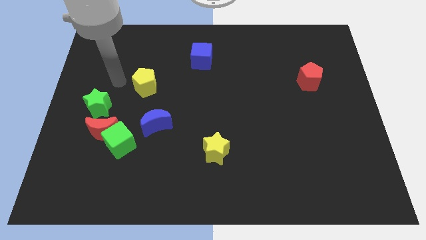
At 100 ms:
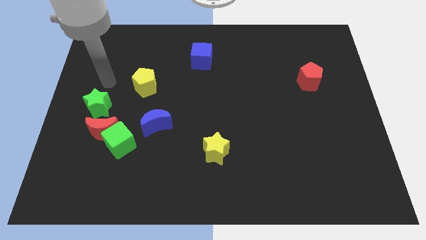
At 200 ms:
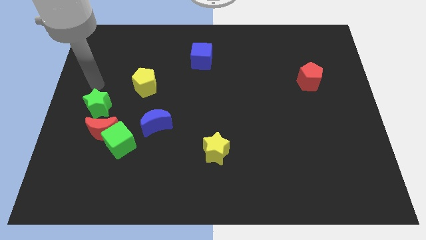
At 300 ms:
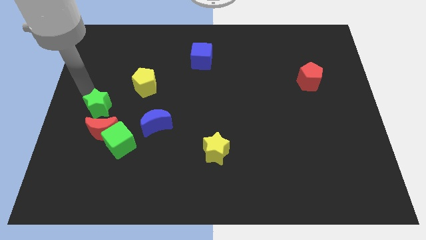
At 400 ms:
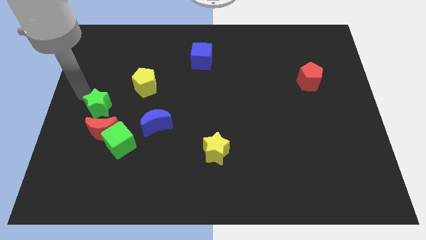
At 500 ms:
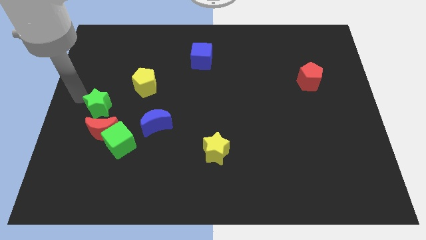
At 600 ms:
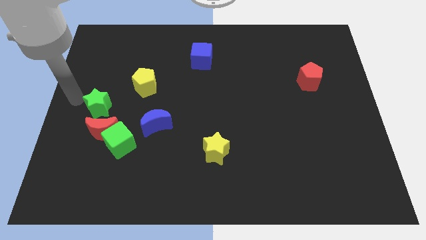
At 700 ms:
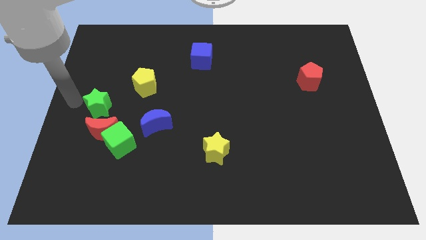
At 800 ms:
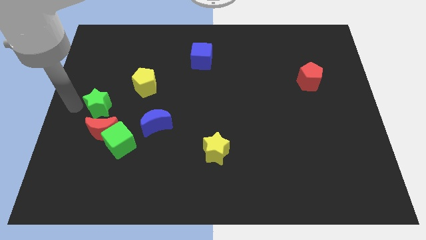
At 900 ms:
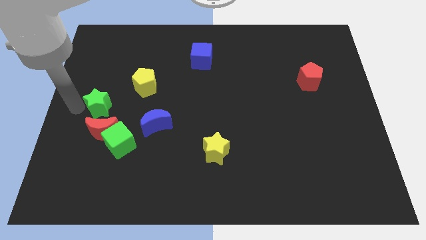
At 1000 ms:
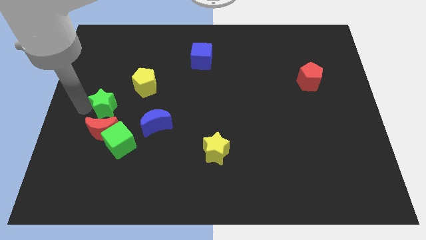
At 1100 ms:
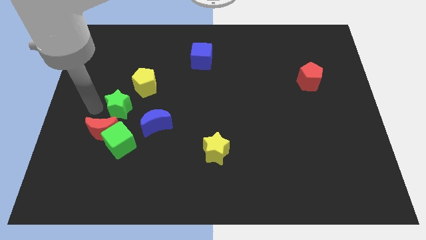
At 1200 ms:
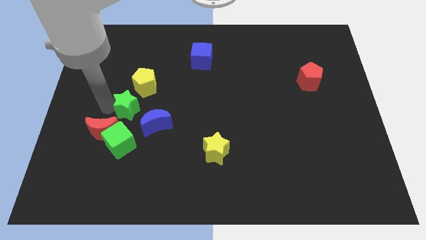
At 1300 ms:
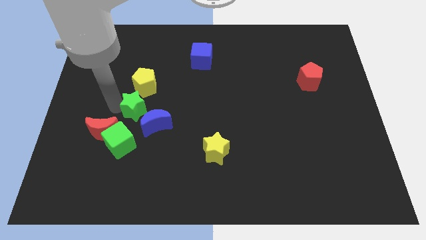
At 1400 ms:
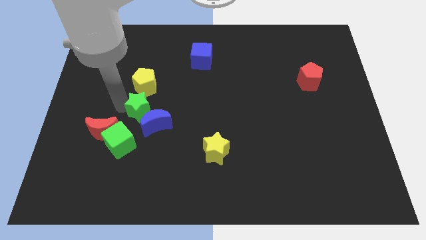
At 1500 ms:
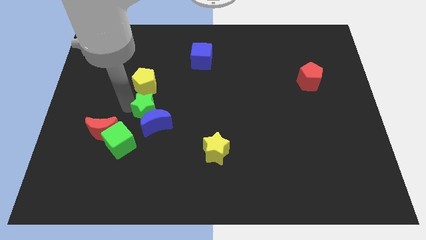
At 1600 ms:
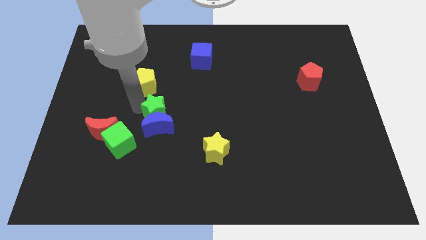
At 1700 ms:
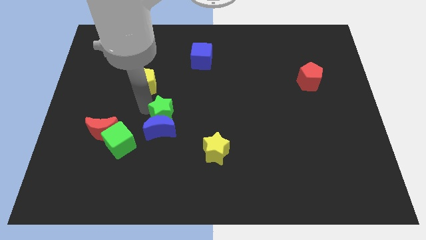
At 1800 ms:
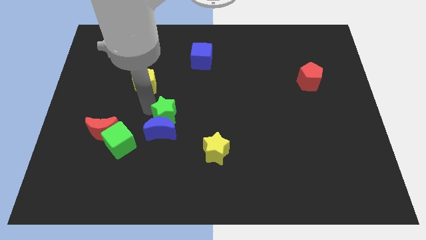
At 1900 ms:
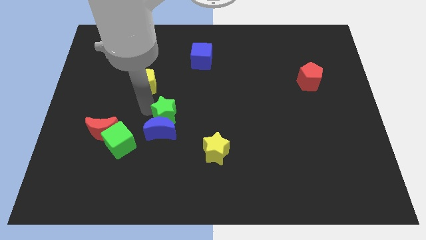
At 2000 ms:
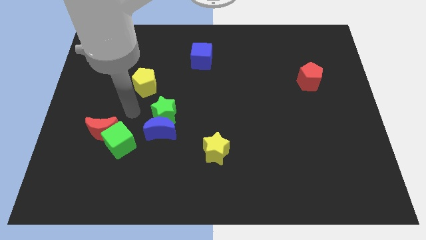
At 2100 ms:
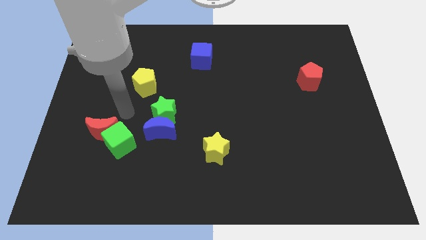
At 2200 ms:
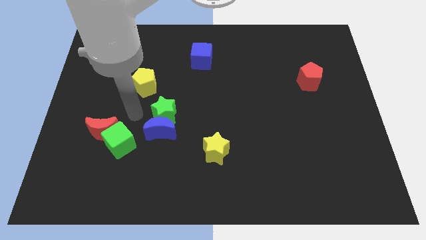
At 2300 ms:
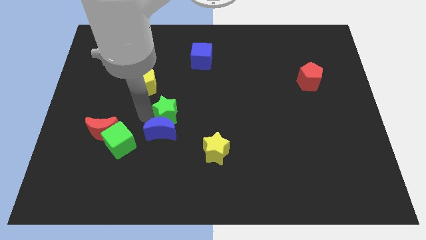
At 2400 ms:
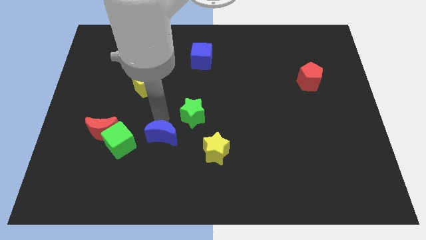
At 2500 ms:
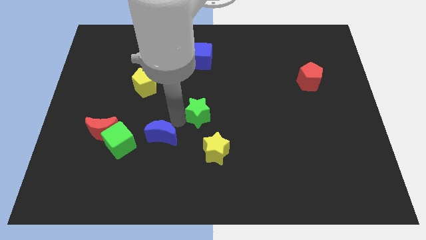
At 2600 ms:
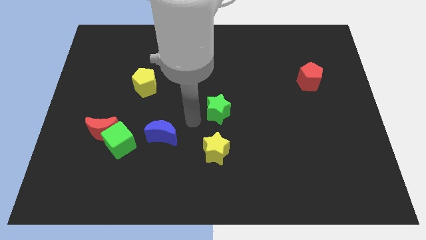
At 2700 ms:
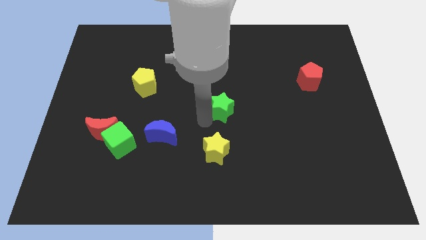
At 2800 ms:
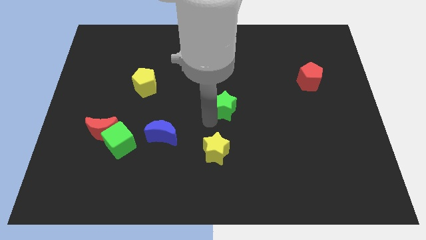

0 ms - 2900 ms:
slide the green star towards the center of the board

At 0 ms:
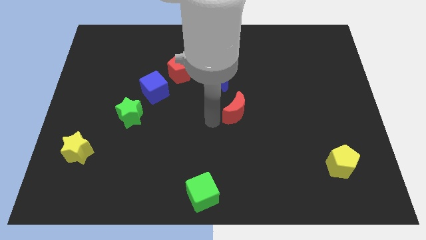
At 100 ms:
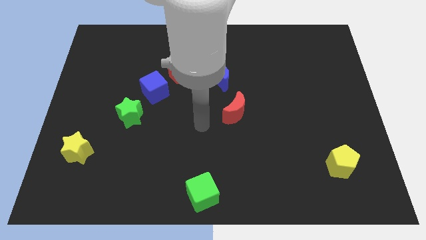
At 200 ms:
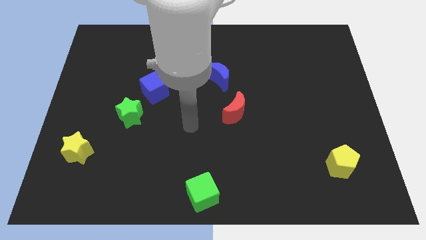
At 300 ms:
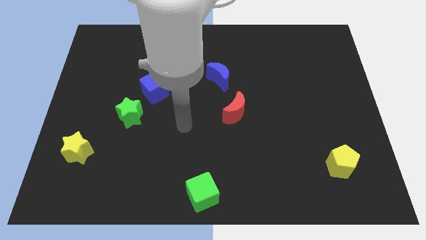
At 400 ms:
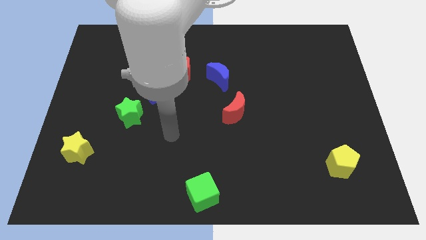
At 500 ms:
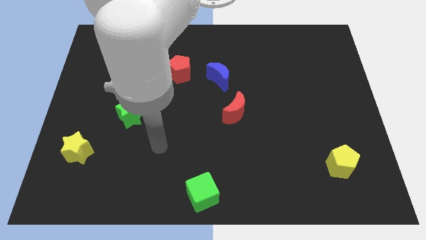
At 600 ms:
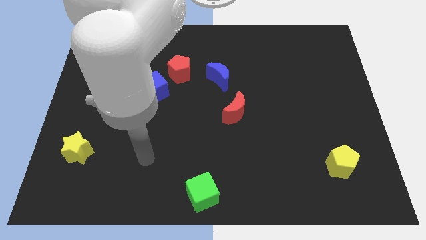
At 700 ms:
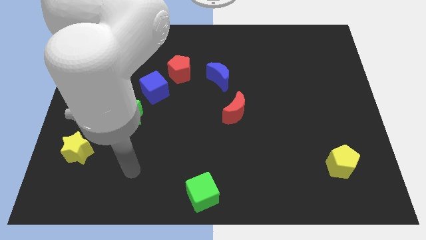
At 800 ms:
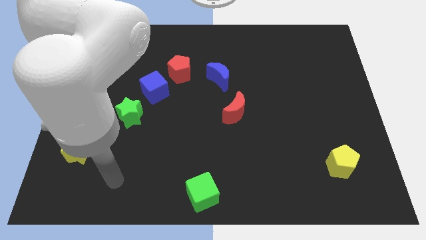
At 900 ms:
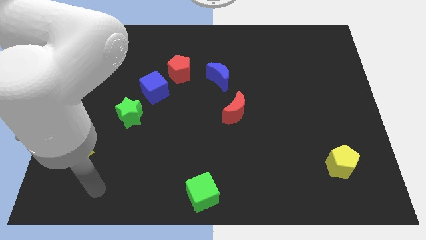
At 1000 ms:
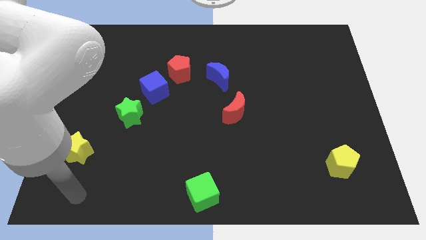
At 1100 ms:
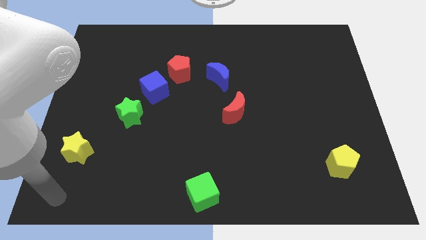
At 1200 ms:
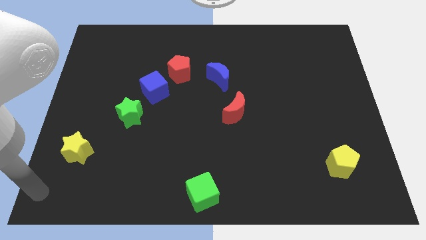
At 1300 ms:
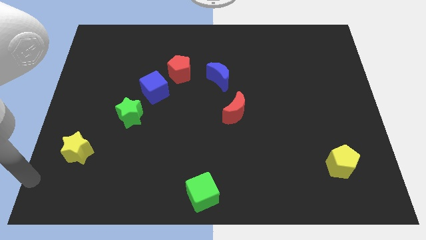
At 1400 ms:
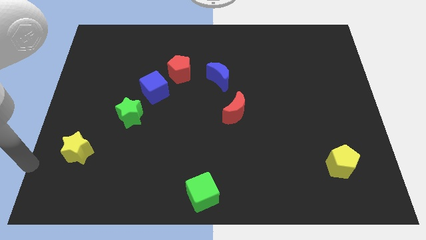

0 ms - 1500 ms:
move your arm towards the bottom left

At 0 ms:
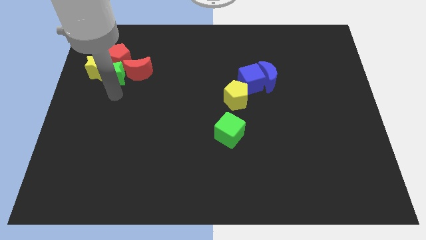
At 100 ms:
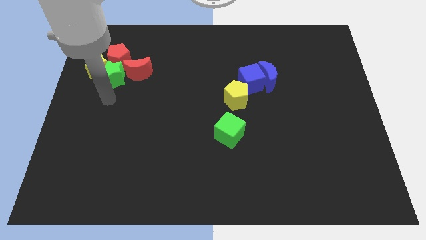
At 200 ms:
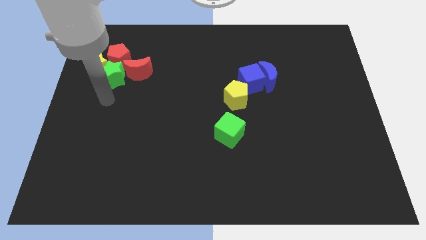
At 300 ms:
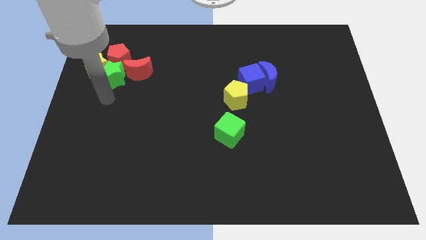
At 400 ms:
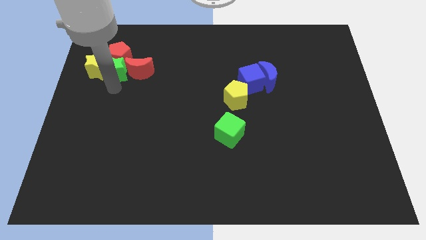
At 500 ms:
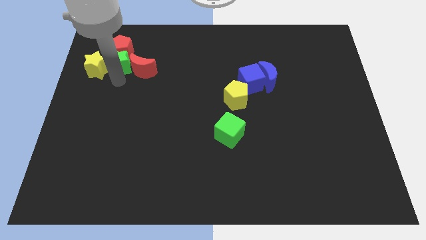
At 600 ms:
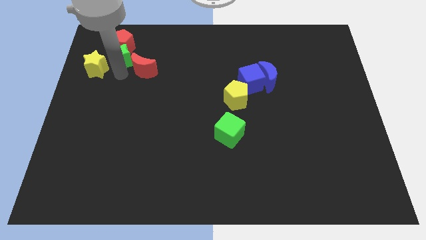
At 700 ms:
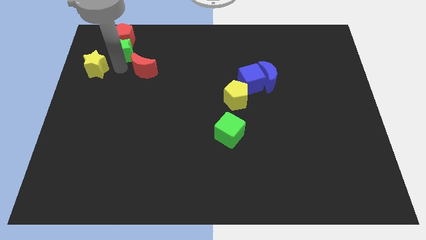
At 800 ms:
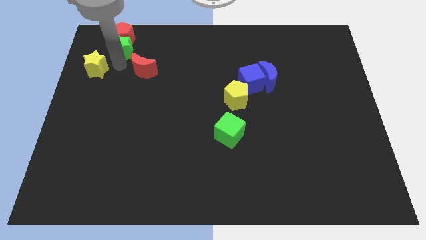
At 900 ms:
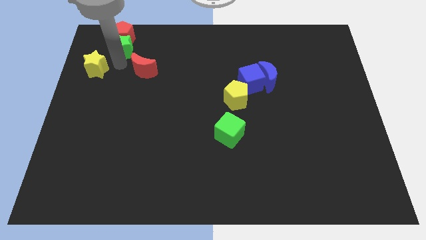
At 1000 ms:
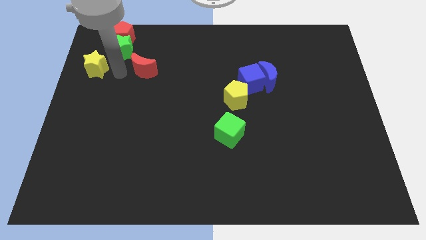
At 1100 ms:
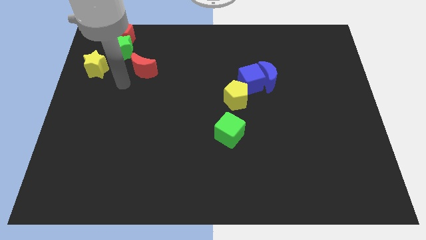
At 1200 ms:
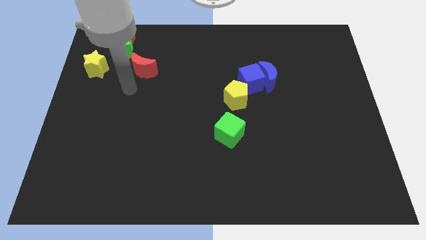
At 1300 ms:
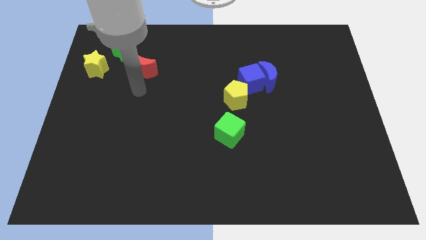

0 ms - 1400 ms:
move the green star and red pentagon to the top left

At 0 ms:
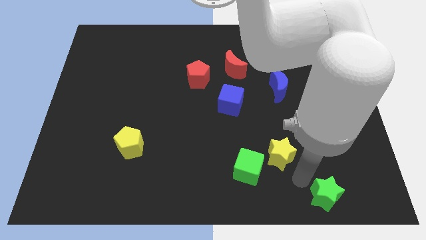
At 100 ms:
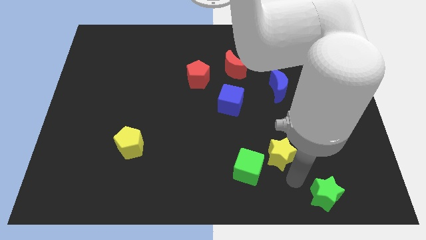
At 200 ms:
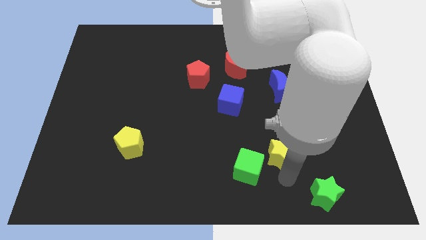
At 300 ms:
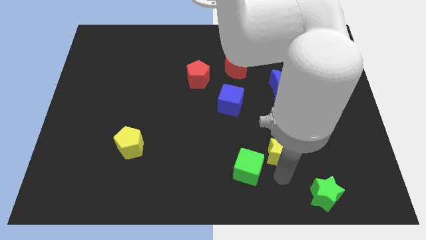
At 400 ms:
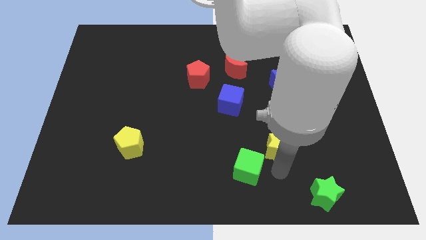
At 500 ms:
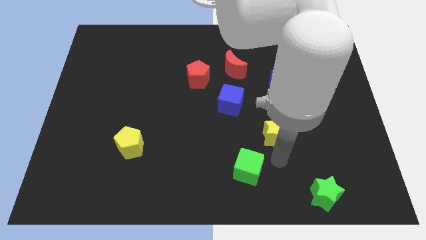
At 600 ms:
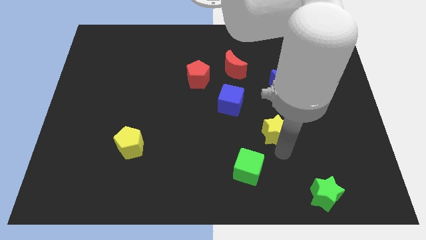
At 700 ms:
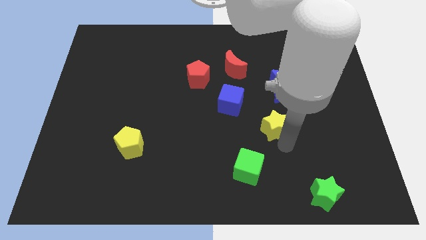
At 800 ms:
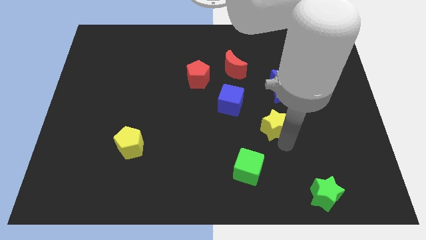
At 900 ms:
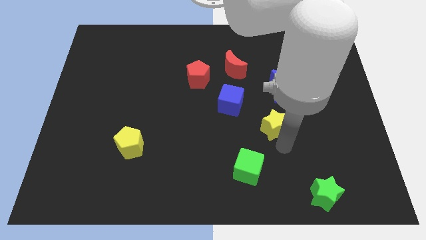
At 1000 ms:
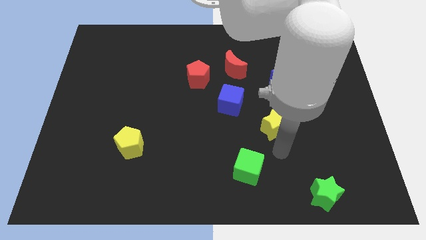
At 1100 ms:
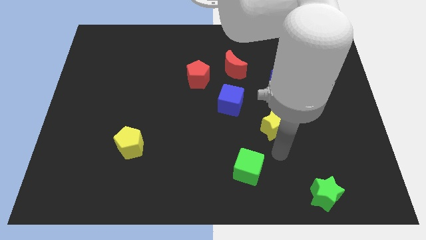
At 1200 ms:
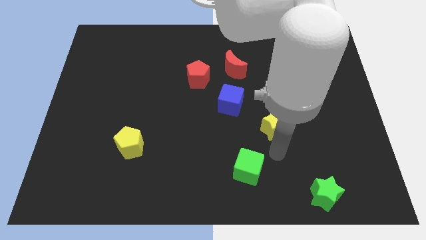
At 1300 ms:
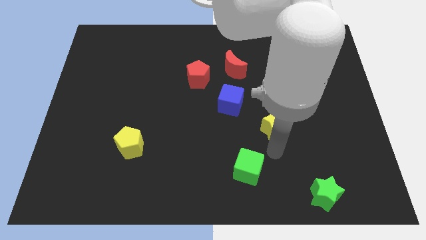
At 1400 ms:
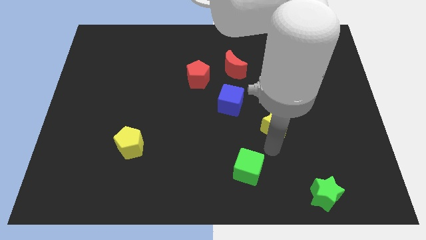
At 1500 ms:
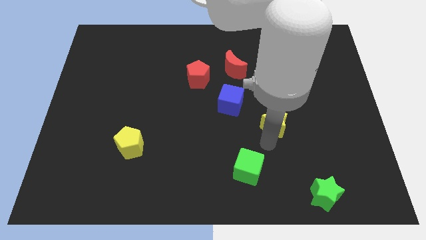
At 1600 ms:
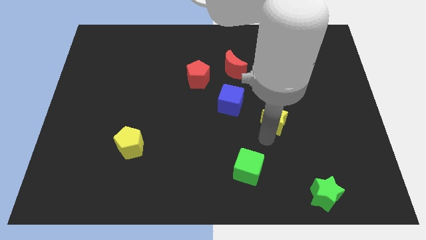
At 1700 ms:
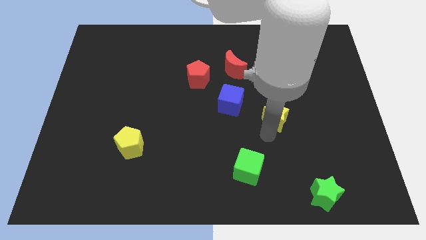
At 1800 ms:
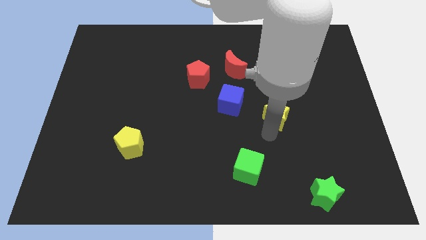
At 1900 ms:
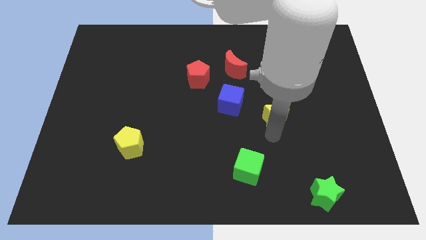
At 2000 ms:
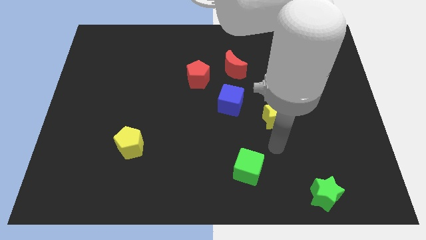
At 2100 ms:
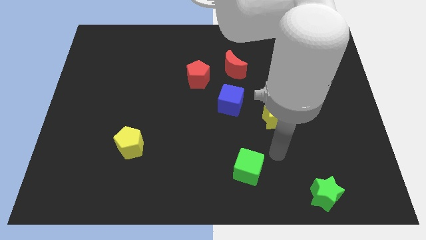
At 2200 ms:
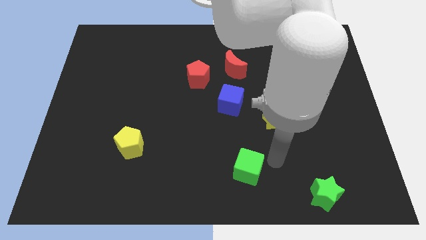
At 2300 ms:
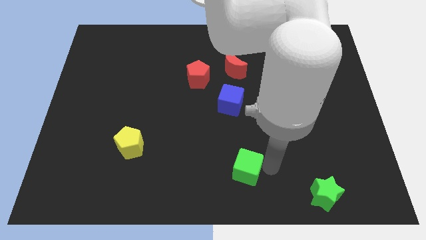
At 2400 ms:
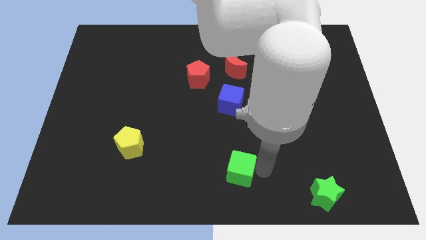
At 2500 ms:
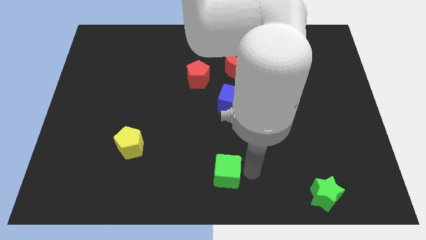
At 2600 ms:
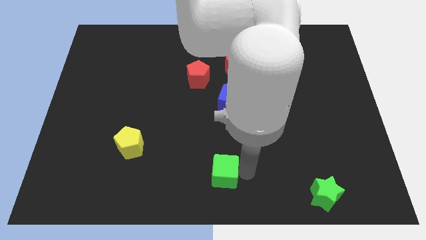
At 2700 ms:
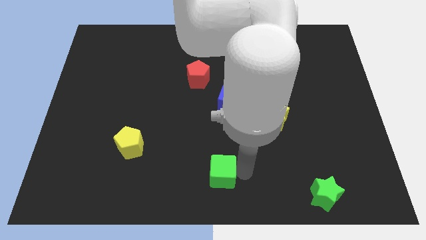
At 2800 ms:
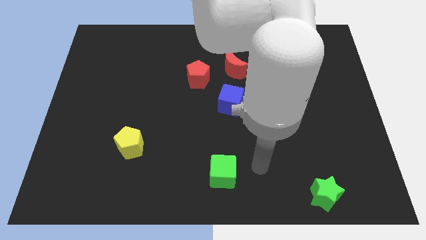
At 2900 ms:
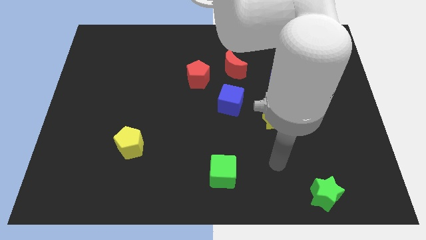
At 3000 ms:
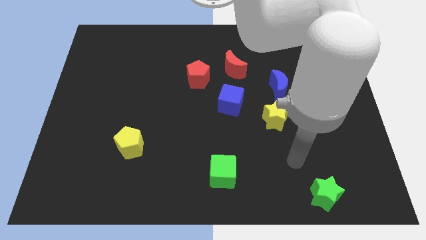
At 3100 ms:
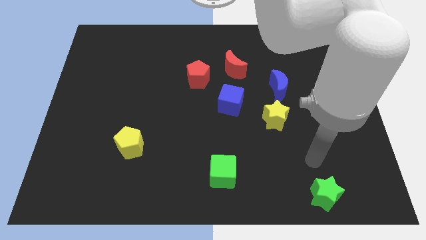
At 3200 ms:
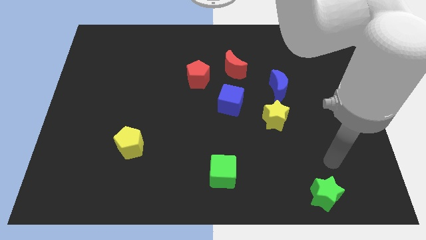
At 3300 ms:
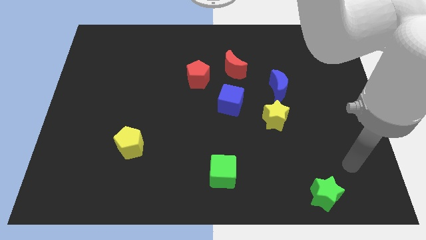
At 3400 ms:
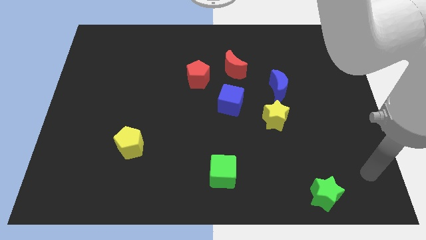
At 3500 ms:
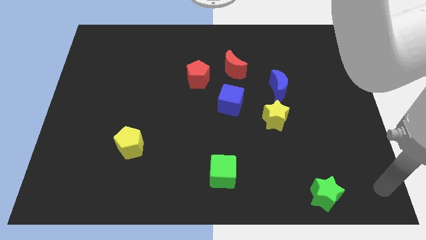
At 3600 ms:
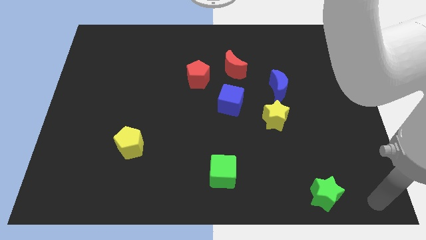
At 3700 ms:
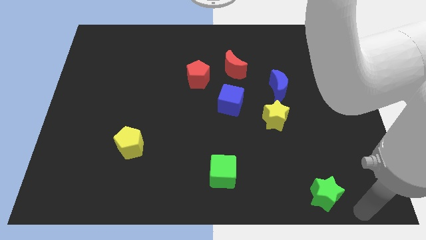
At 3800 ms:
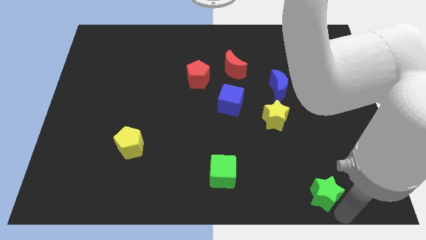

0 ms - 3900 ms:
move the yellow star and green cube in opposite directions
